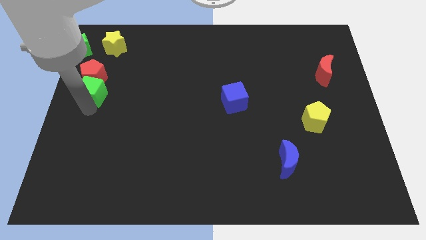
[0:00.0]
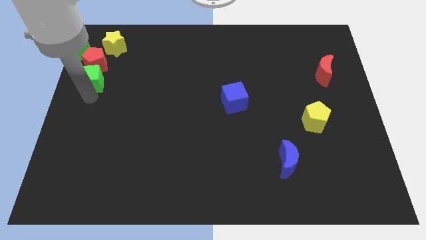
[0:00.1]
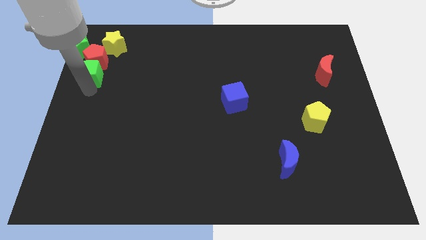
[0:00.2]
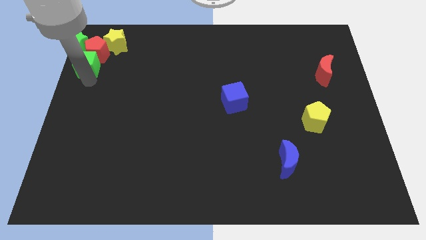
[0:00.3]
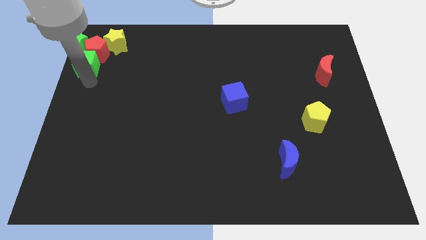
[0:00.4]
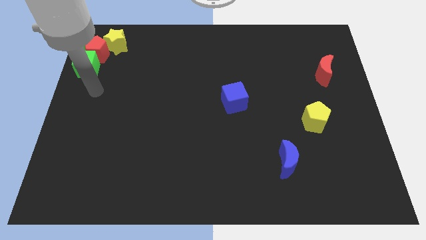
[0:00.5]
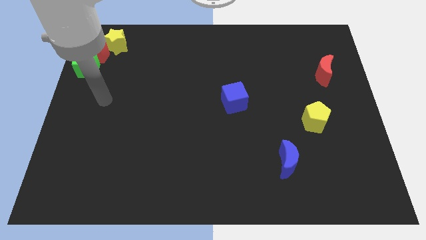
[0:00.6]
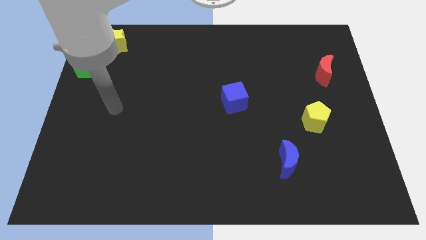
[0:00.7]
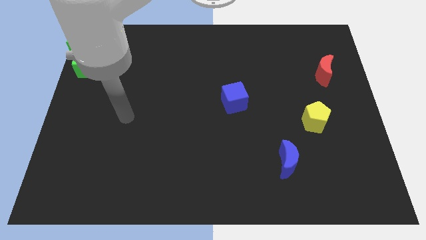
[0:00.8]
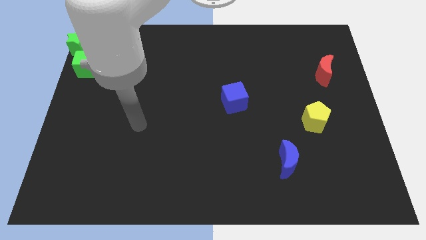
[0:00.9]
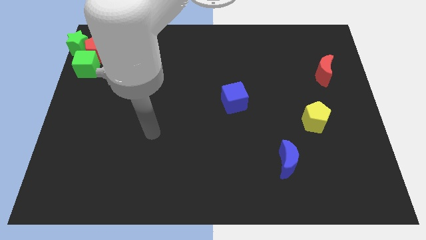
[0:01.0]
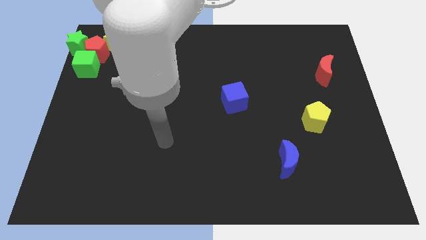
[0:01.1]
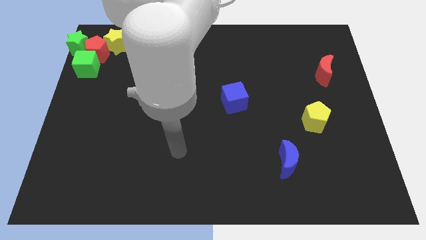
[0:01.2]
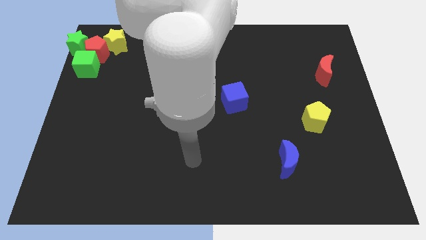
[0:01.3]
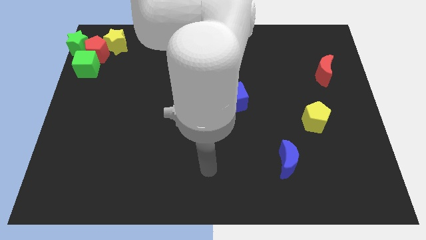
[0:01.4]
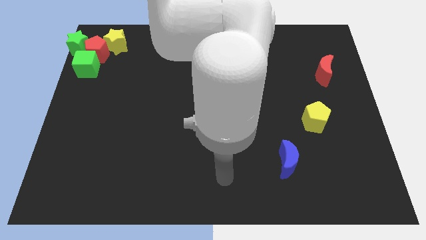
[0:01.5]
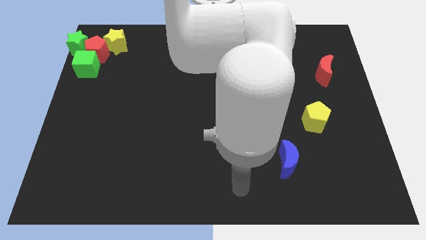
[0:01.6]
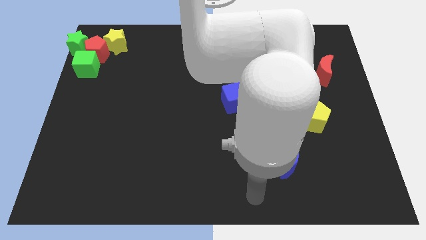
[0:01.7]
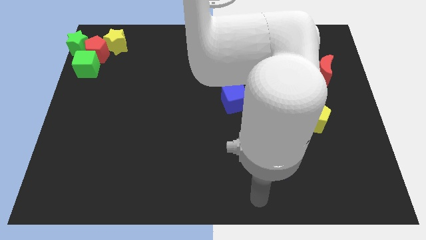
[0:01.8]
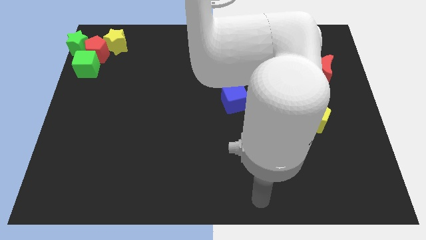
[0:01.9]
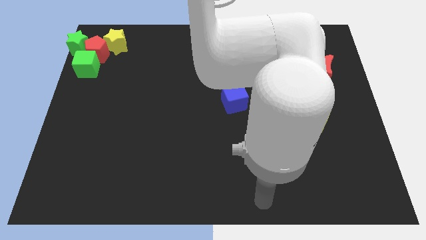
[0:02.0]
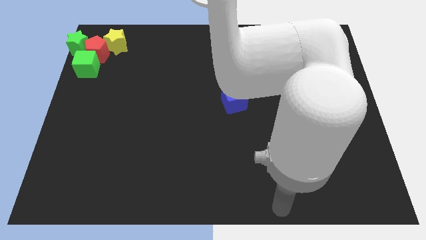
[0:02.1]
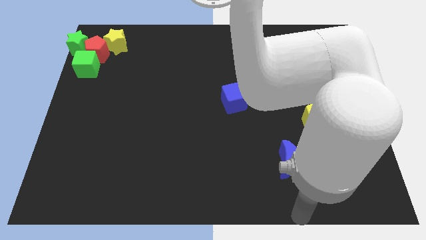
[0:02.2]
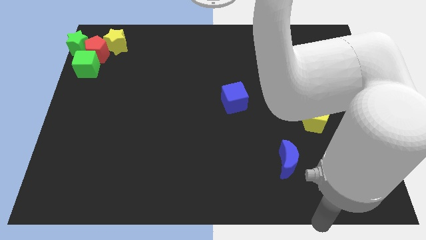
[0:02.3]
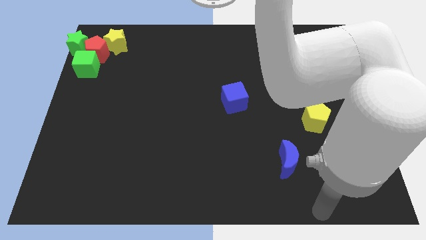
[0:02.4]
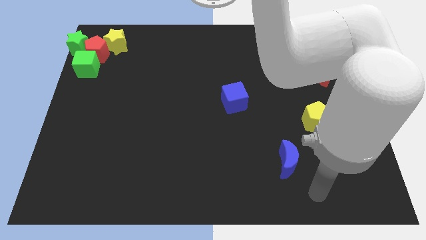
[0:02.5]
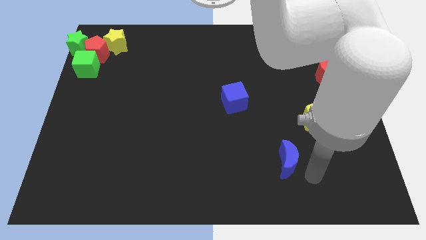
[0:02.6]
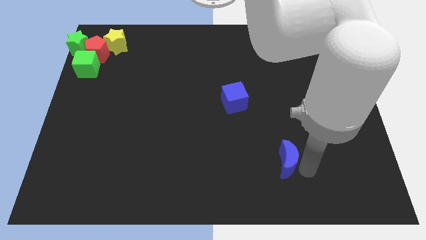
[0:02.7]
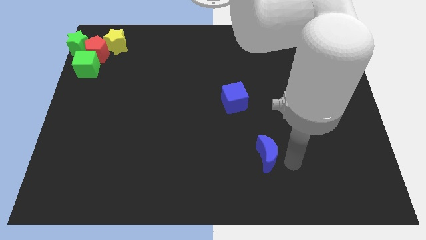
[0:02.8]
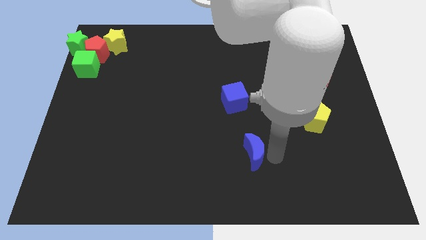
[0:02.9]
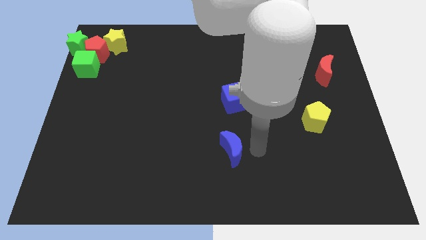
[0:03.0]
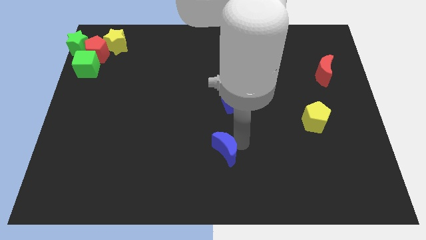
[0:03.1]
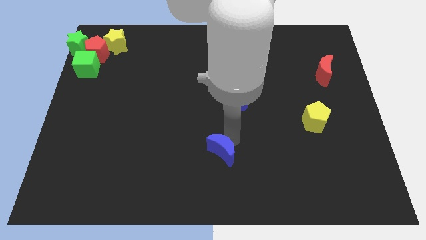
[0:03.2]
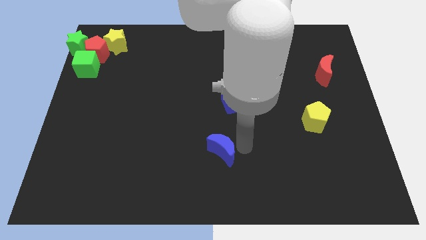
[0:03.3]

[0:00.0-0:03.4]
move your arm towards the blue crescent

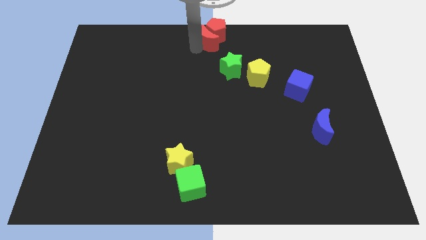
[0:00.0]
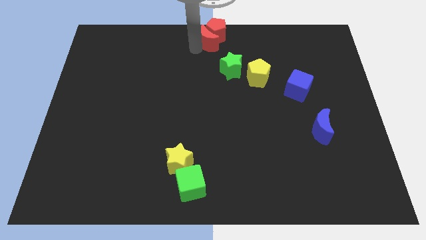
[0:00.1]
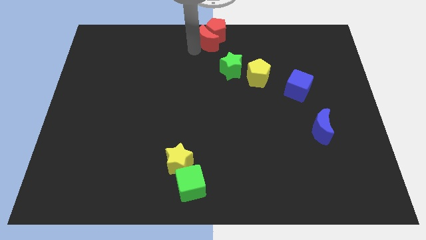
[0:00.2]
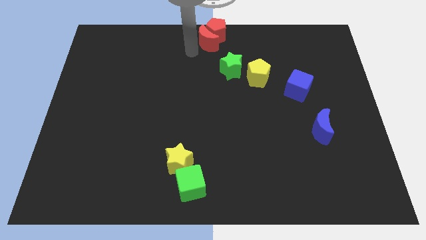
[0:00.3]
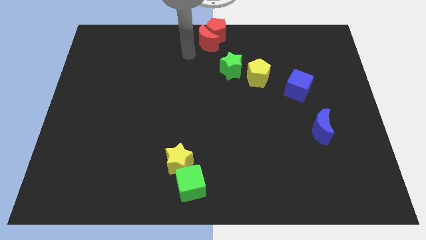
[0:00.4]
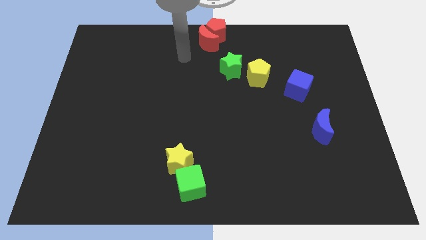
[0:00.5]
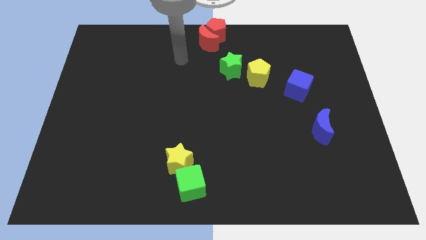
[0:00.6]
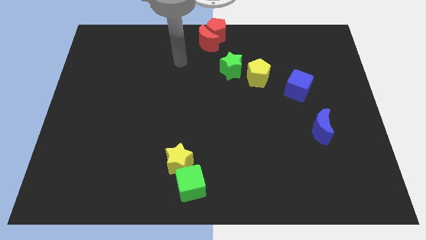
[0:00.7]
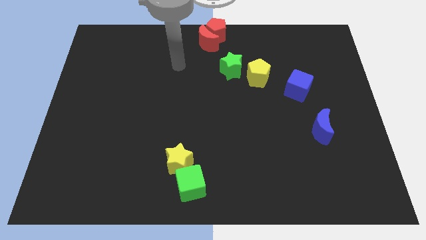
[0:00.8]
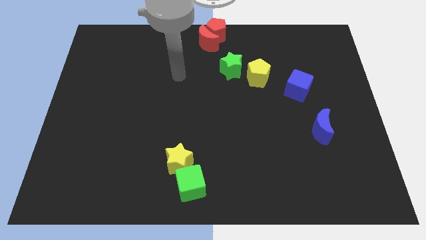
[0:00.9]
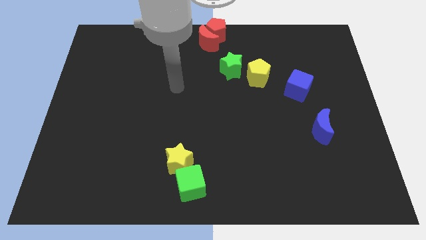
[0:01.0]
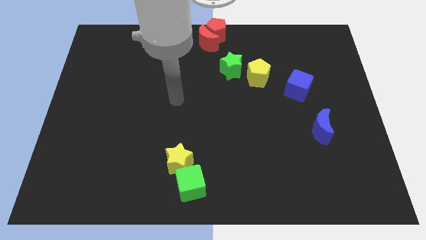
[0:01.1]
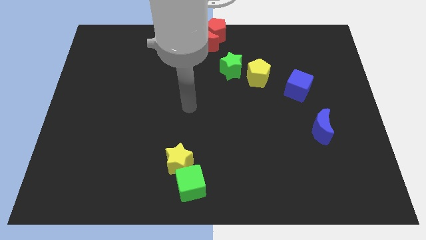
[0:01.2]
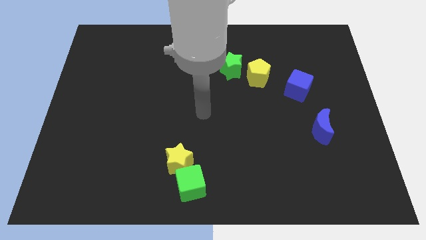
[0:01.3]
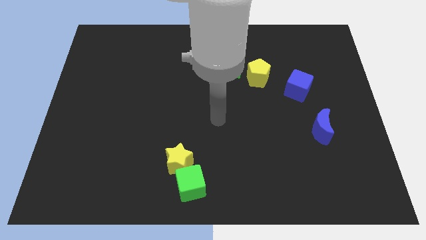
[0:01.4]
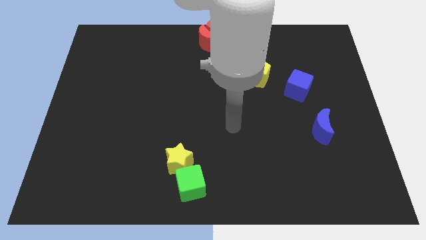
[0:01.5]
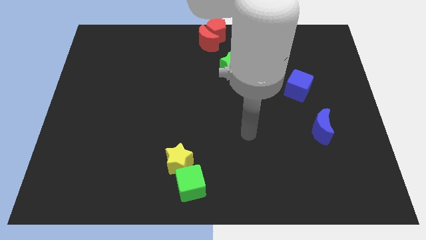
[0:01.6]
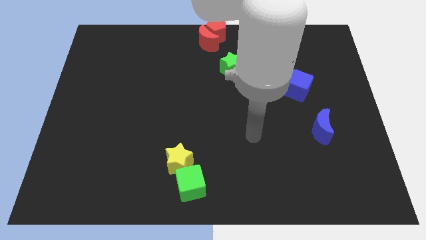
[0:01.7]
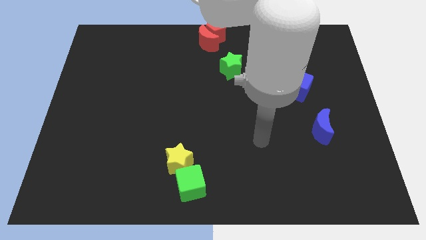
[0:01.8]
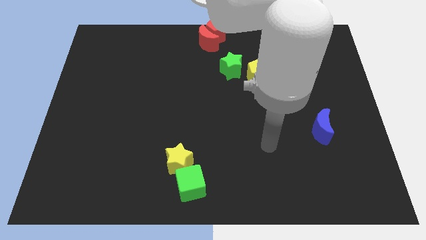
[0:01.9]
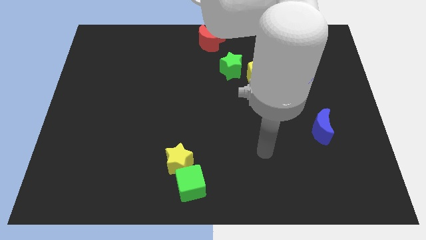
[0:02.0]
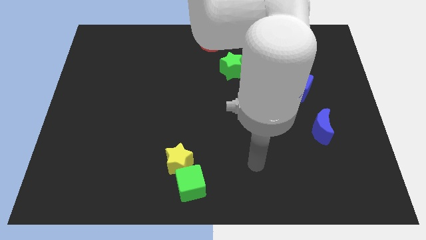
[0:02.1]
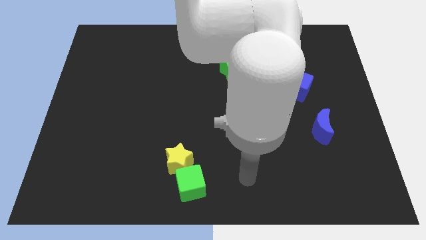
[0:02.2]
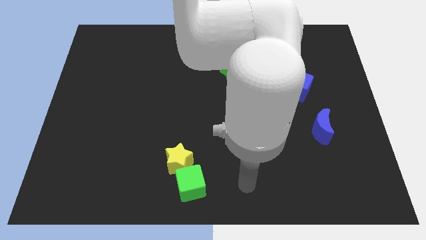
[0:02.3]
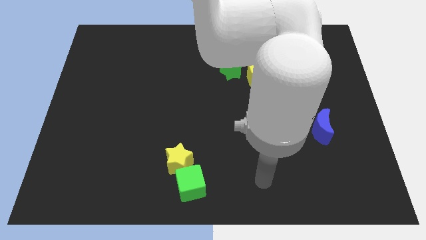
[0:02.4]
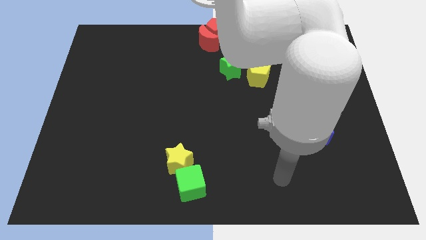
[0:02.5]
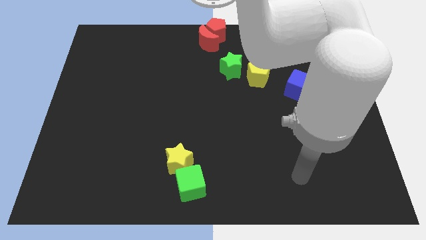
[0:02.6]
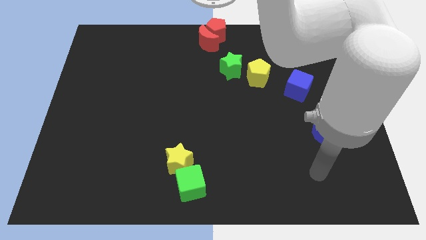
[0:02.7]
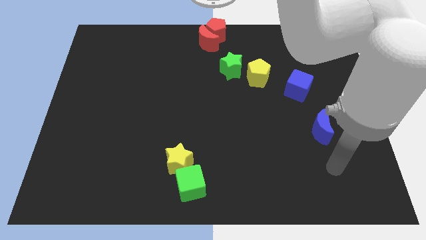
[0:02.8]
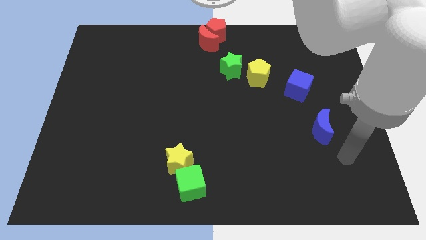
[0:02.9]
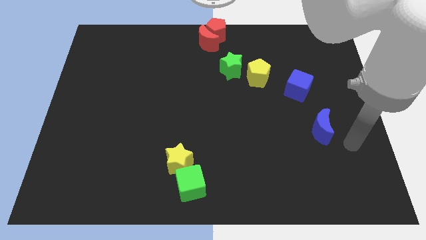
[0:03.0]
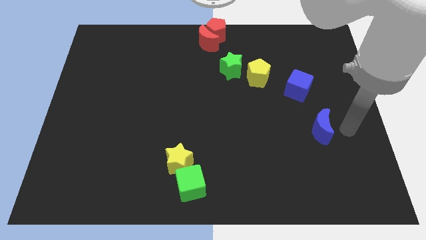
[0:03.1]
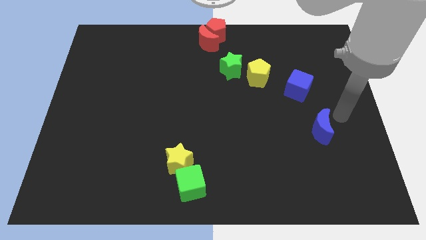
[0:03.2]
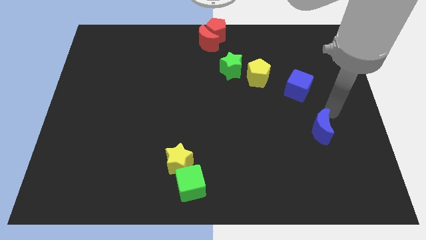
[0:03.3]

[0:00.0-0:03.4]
place the arm near the blue moon

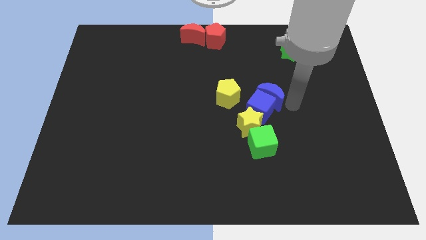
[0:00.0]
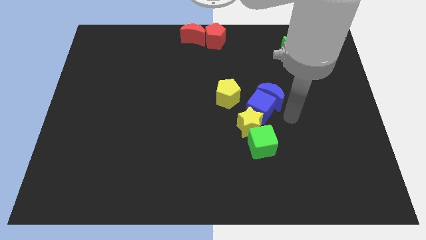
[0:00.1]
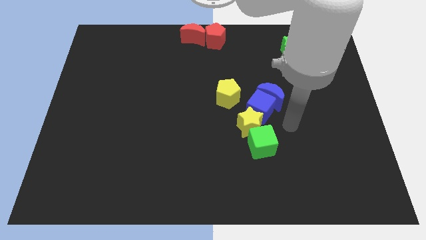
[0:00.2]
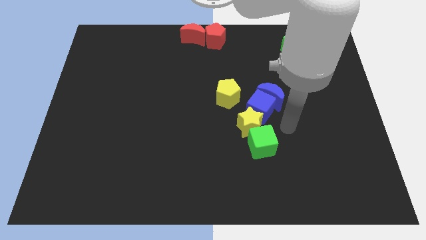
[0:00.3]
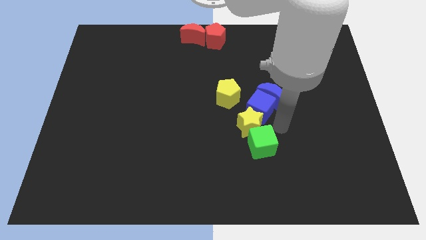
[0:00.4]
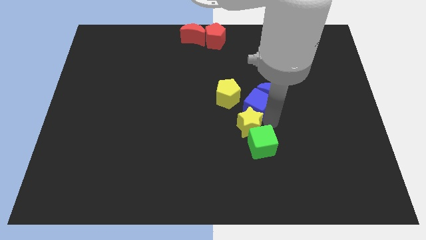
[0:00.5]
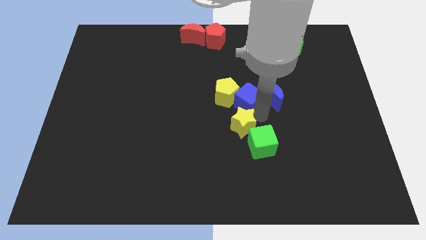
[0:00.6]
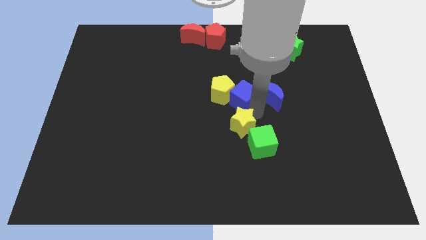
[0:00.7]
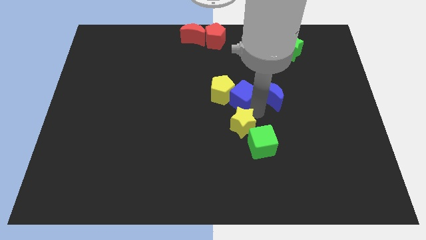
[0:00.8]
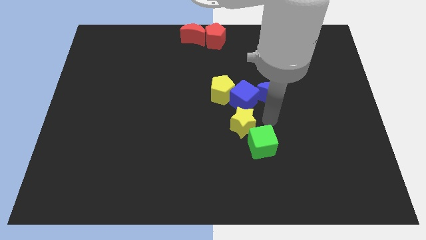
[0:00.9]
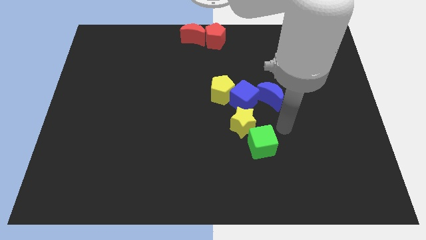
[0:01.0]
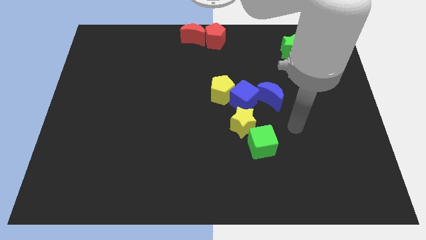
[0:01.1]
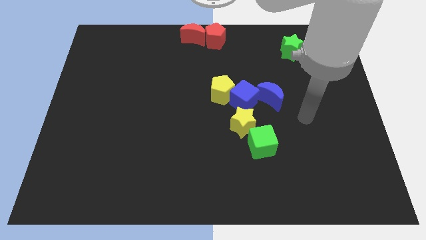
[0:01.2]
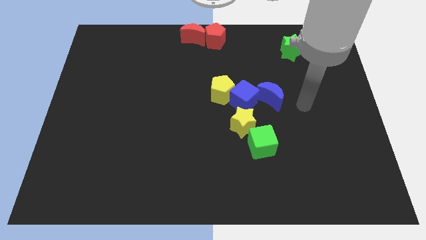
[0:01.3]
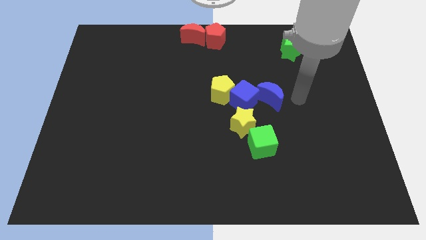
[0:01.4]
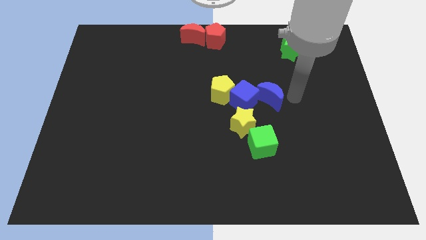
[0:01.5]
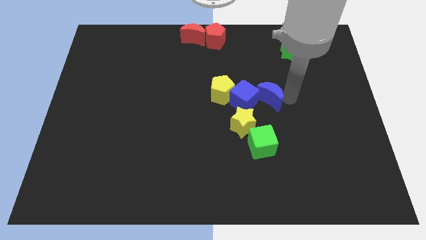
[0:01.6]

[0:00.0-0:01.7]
push the blue cube into the yellow pentagon

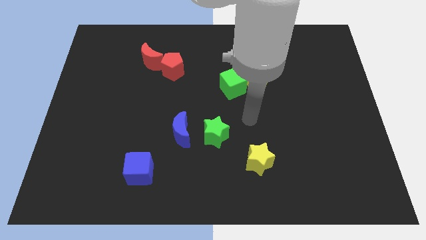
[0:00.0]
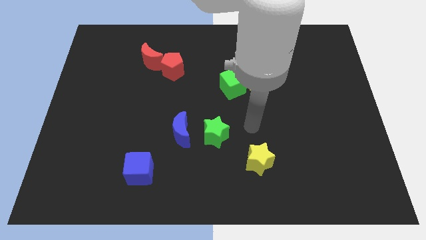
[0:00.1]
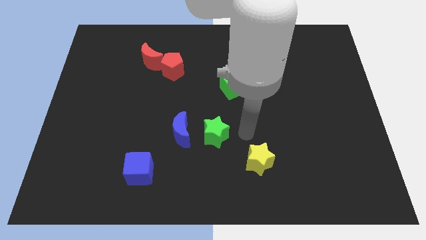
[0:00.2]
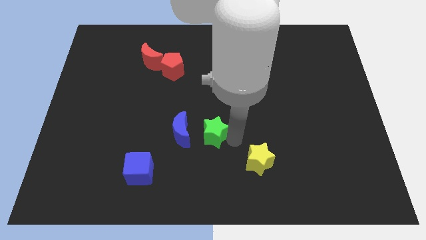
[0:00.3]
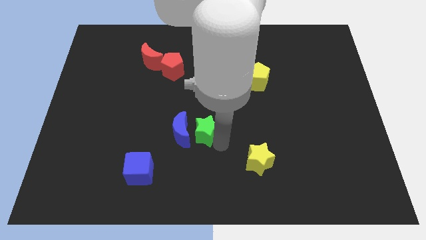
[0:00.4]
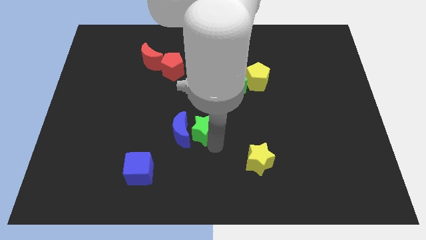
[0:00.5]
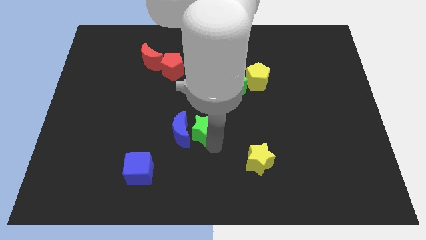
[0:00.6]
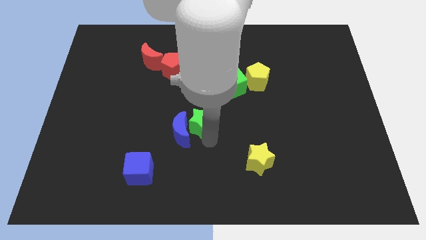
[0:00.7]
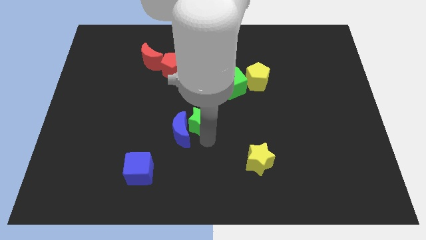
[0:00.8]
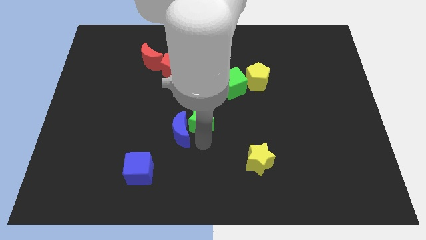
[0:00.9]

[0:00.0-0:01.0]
move green start to left of the blue moon
